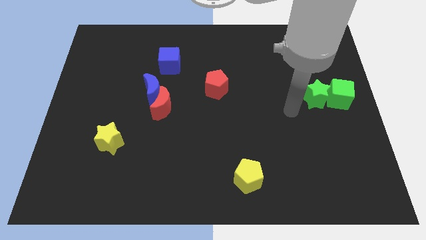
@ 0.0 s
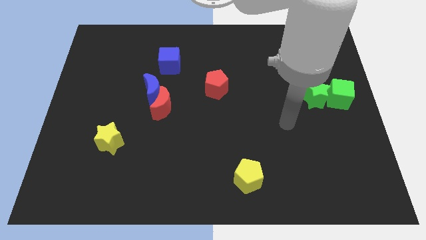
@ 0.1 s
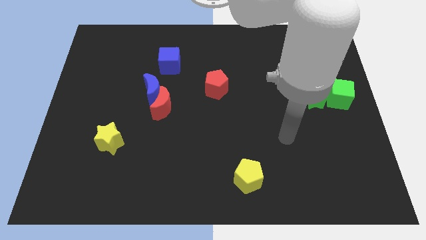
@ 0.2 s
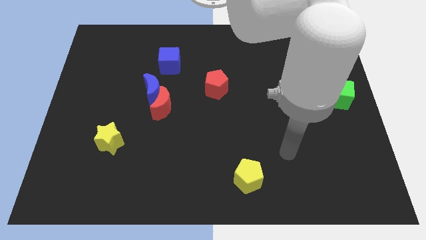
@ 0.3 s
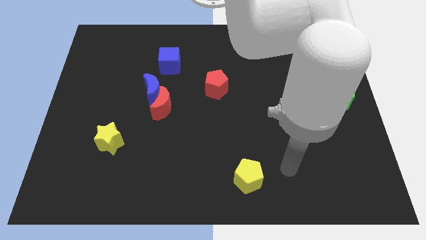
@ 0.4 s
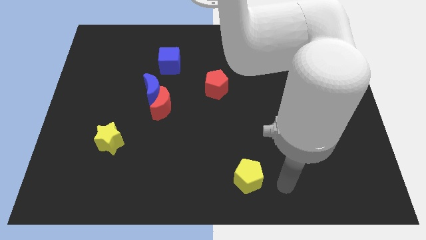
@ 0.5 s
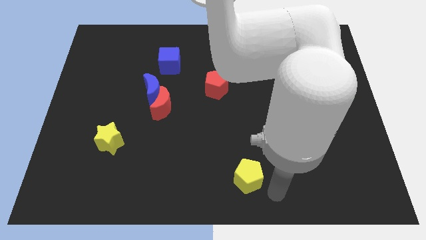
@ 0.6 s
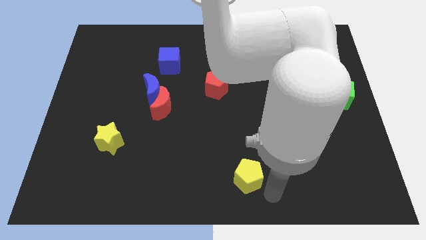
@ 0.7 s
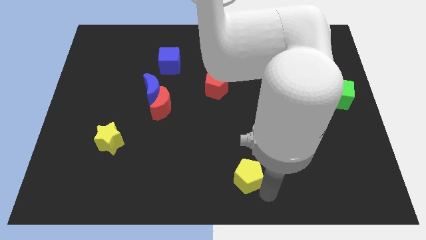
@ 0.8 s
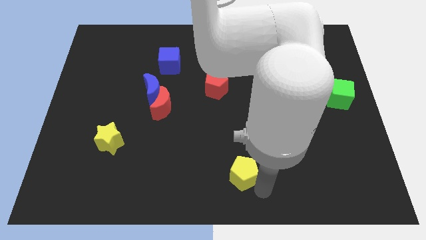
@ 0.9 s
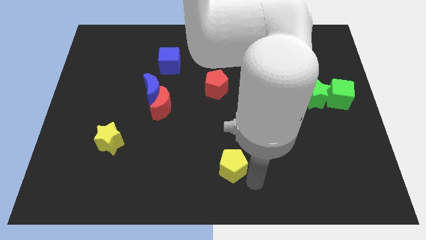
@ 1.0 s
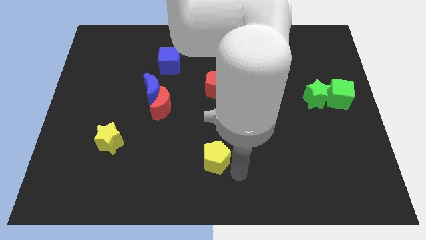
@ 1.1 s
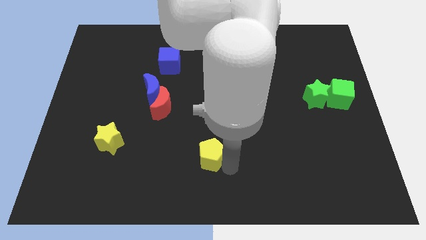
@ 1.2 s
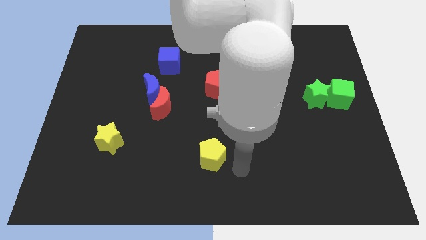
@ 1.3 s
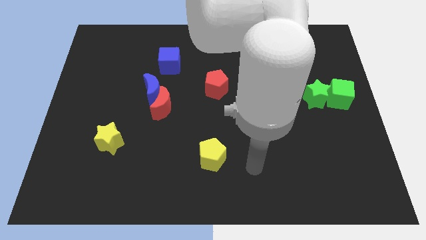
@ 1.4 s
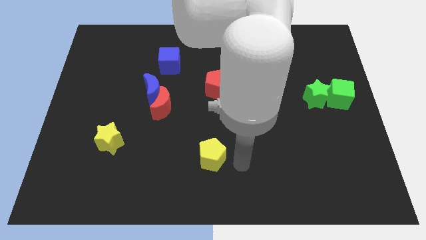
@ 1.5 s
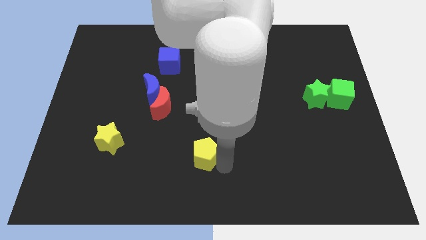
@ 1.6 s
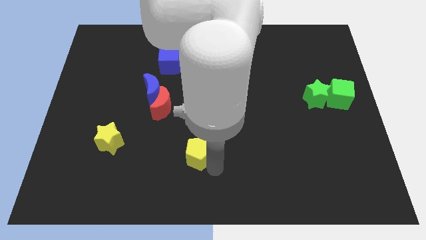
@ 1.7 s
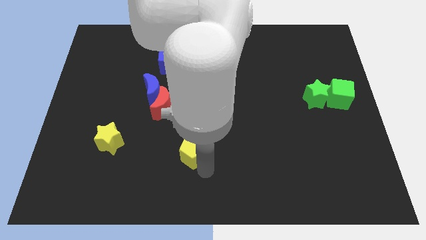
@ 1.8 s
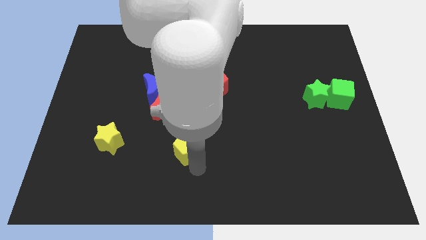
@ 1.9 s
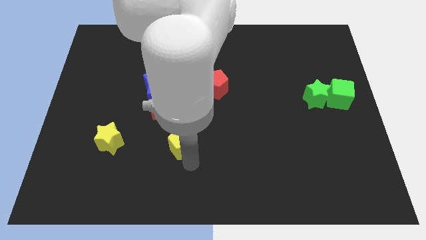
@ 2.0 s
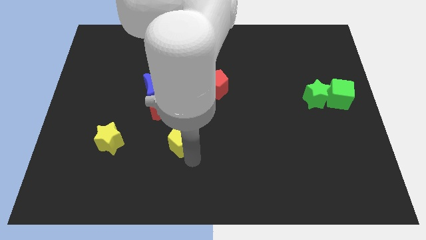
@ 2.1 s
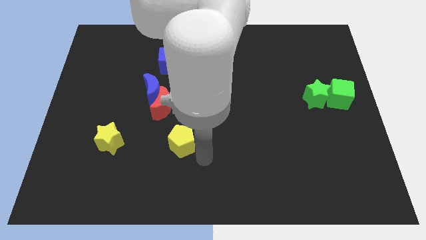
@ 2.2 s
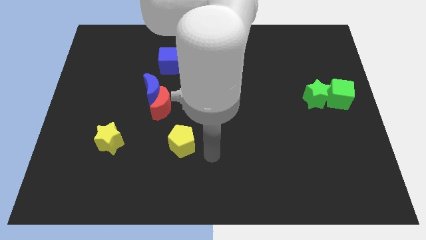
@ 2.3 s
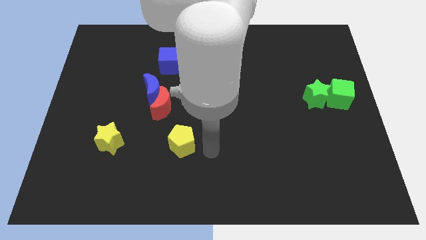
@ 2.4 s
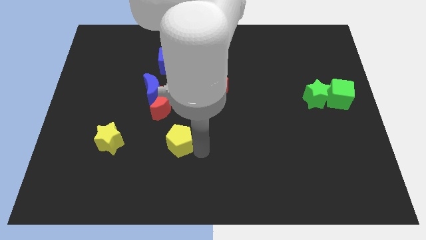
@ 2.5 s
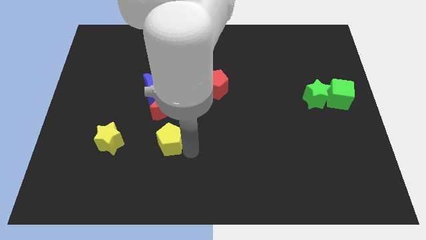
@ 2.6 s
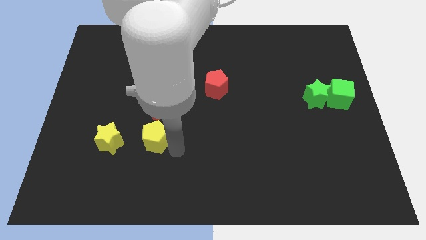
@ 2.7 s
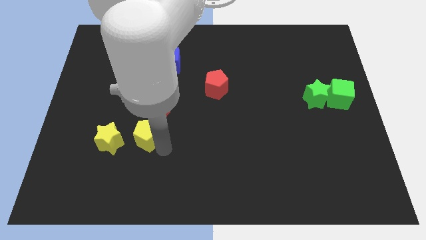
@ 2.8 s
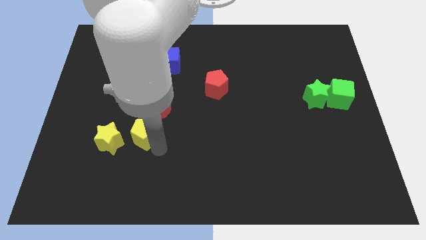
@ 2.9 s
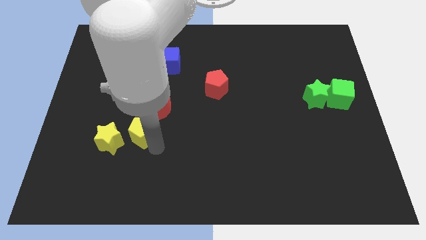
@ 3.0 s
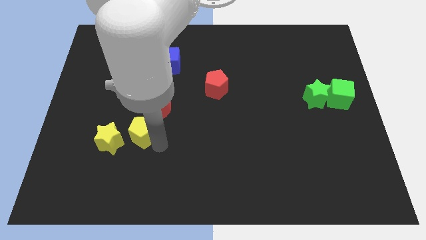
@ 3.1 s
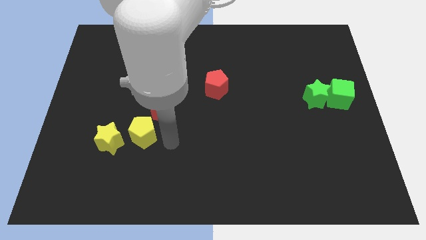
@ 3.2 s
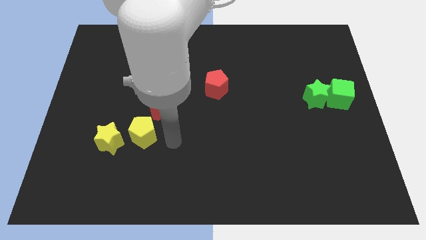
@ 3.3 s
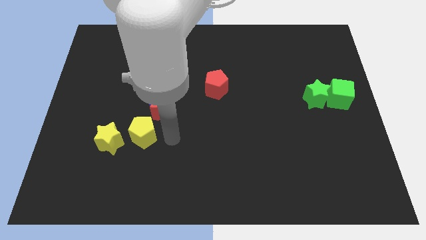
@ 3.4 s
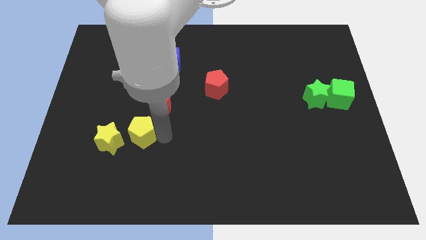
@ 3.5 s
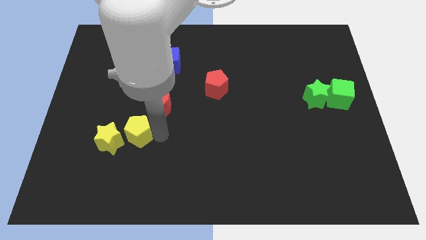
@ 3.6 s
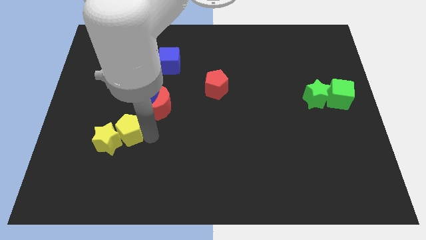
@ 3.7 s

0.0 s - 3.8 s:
slide the yellow pentagon into the right side of the yellow star

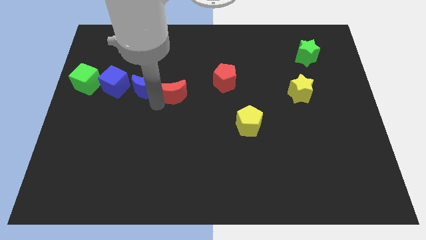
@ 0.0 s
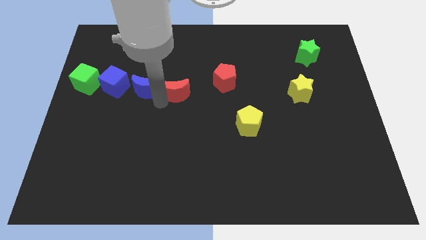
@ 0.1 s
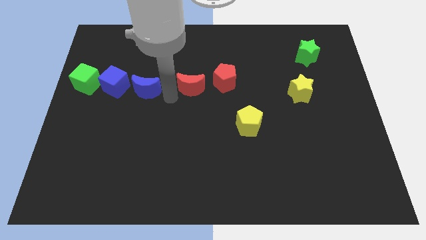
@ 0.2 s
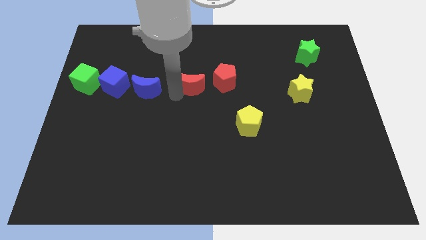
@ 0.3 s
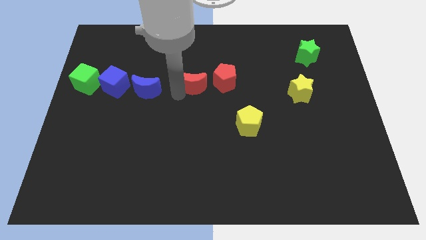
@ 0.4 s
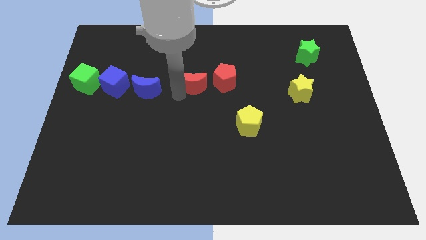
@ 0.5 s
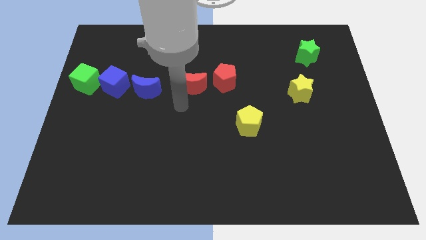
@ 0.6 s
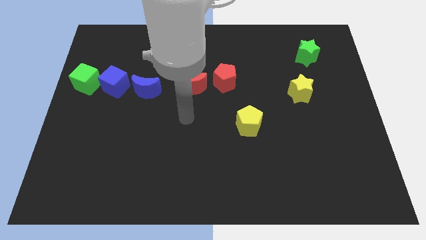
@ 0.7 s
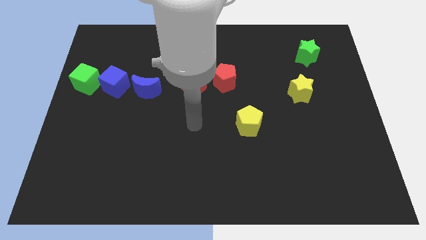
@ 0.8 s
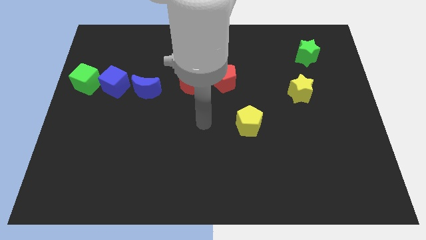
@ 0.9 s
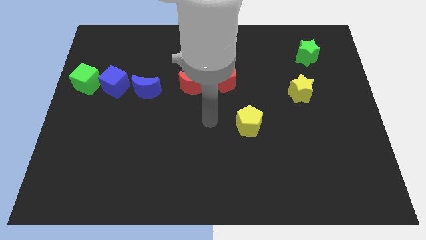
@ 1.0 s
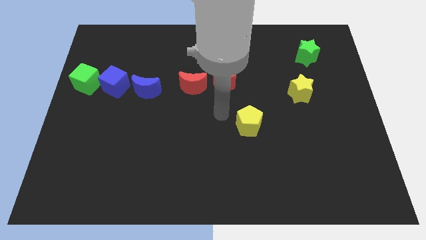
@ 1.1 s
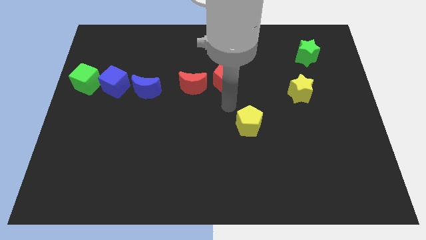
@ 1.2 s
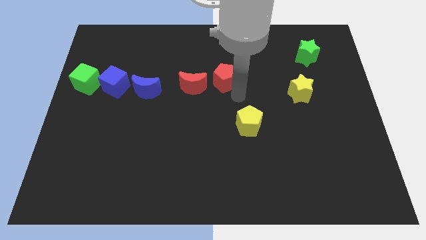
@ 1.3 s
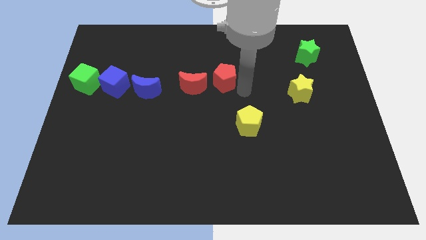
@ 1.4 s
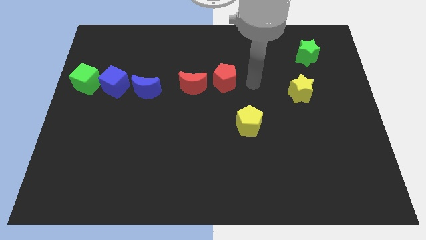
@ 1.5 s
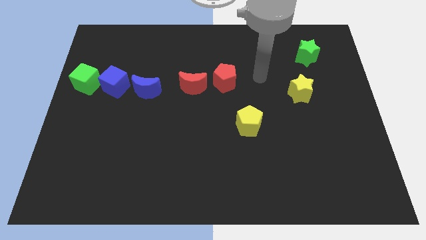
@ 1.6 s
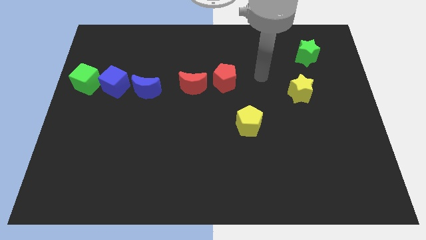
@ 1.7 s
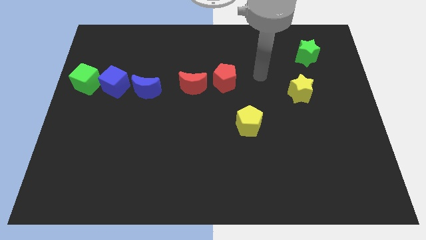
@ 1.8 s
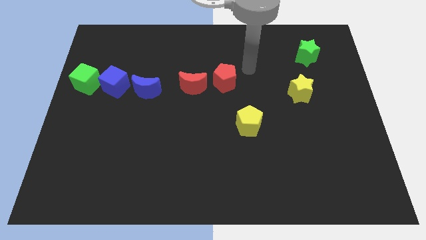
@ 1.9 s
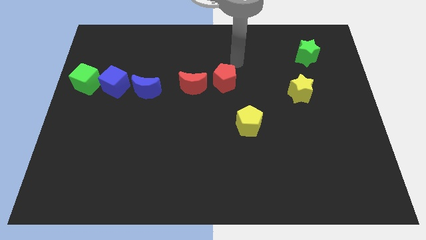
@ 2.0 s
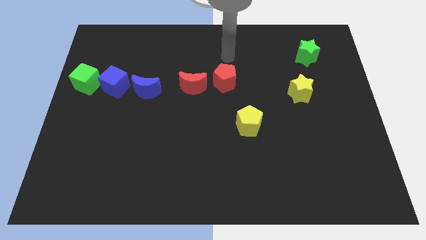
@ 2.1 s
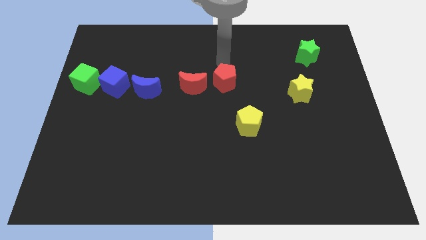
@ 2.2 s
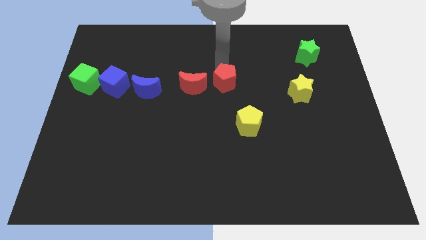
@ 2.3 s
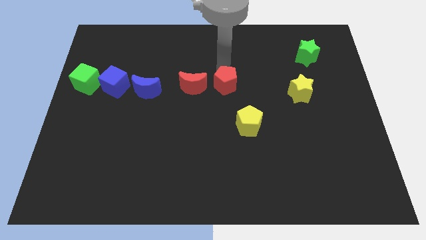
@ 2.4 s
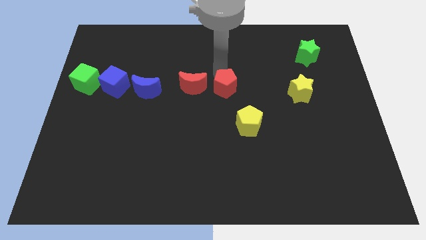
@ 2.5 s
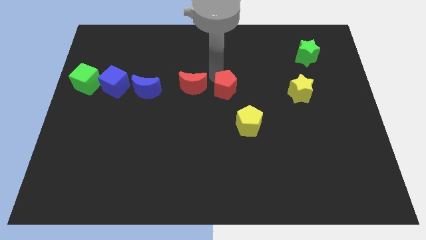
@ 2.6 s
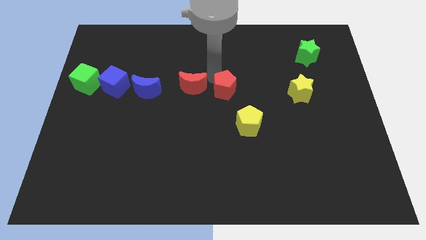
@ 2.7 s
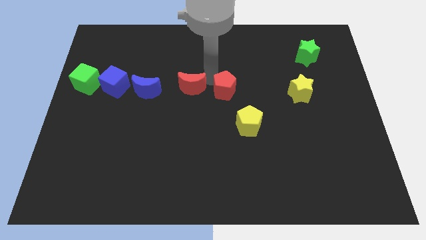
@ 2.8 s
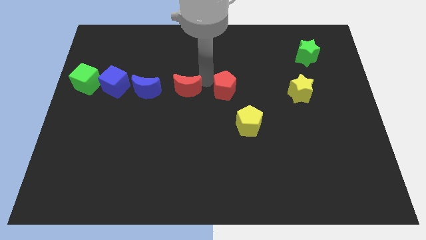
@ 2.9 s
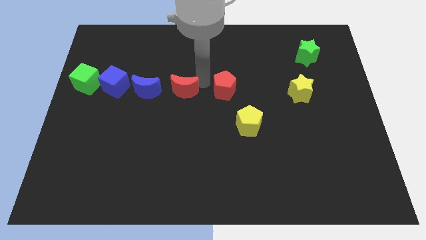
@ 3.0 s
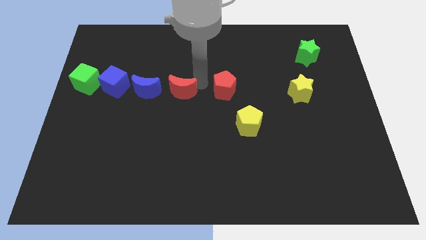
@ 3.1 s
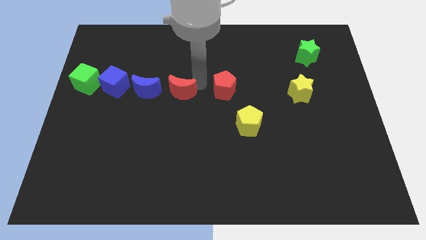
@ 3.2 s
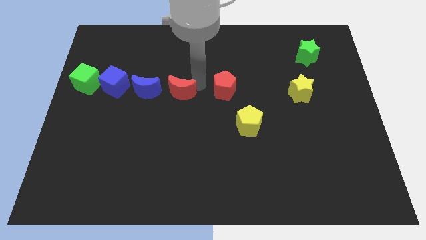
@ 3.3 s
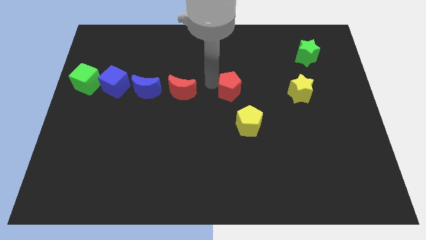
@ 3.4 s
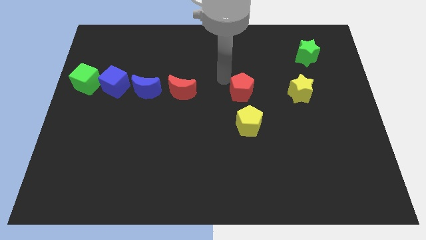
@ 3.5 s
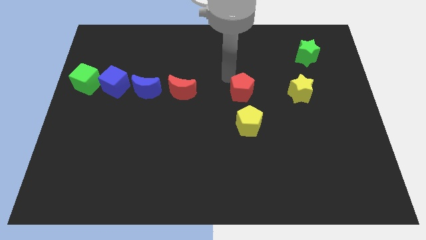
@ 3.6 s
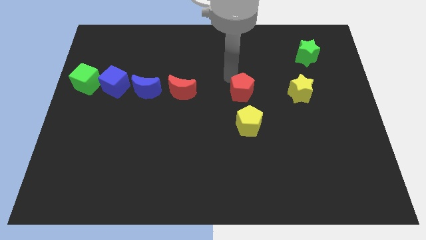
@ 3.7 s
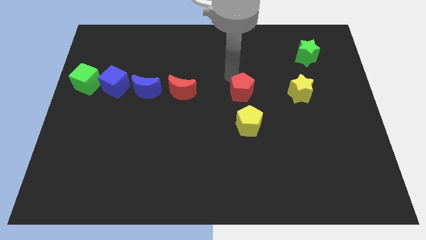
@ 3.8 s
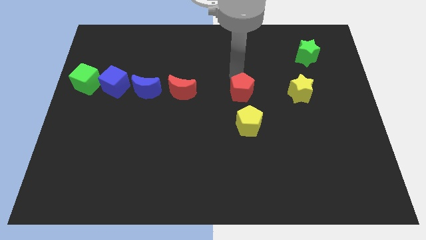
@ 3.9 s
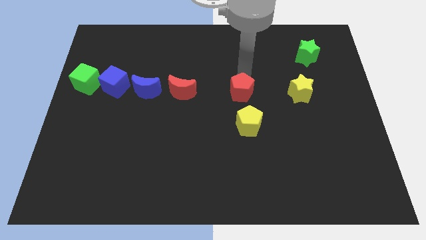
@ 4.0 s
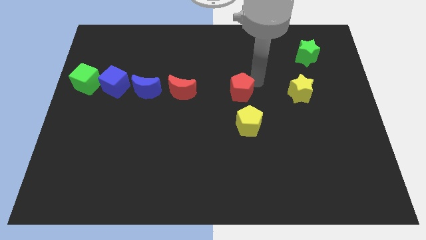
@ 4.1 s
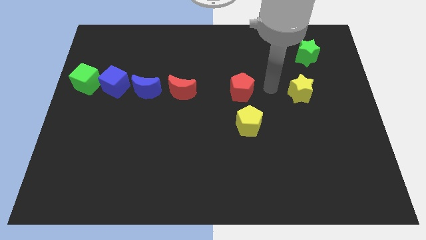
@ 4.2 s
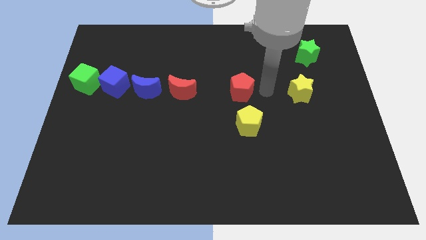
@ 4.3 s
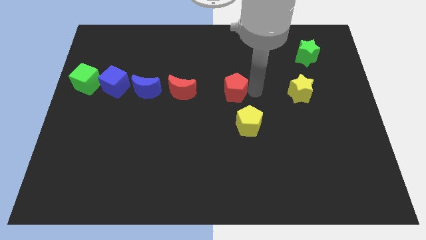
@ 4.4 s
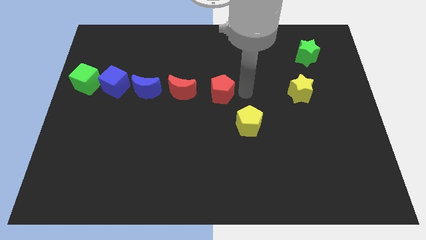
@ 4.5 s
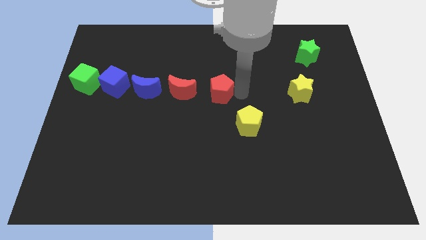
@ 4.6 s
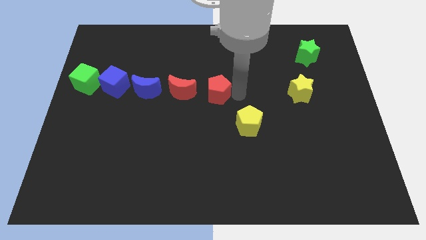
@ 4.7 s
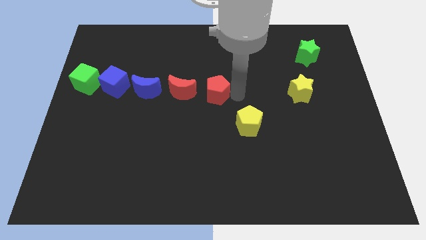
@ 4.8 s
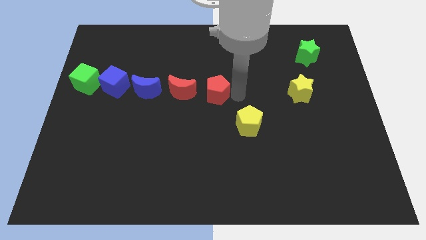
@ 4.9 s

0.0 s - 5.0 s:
adjust the red crescent and red pentagon at the right side of the blue crescent

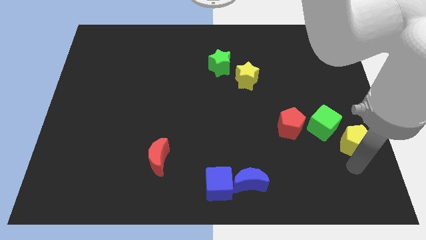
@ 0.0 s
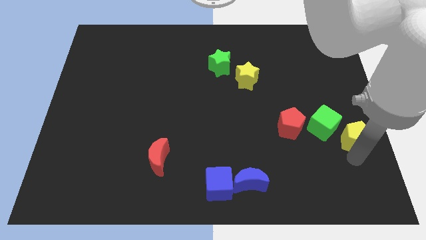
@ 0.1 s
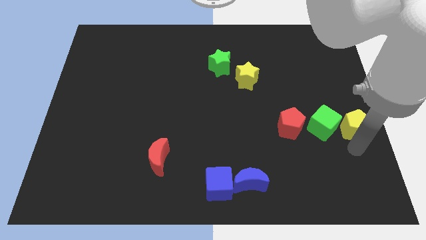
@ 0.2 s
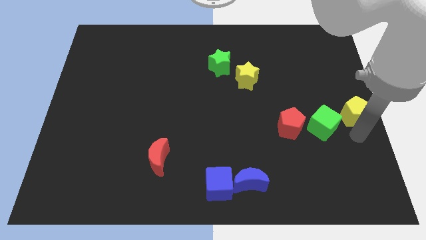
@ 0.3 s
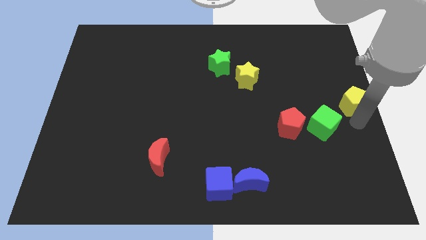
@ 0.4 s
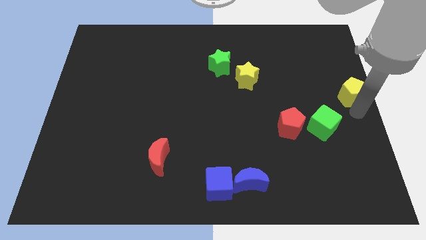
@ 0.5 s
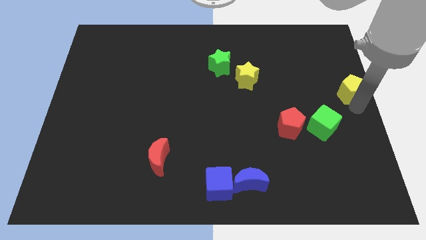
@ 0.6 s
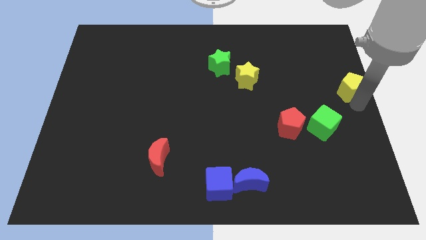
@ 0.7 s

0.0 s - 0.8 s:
move the yellow pentagon above the right of green cube
